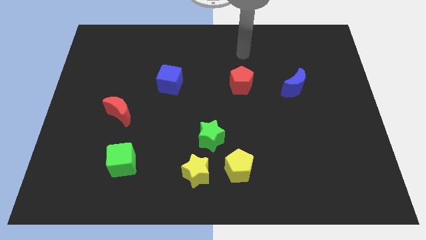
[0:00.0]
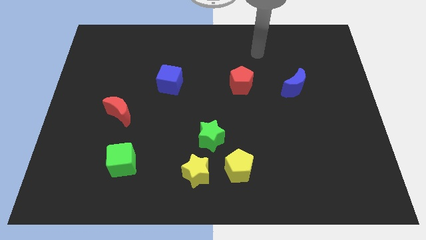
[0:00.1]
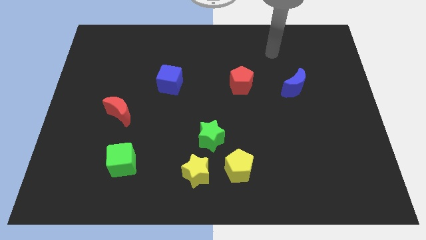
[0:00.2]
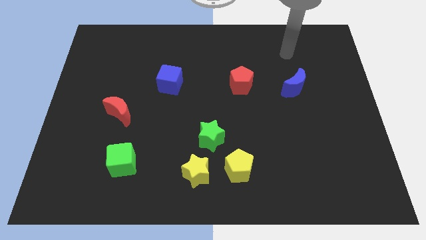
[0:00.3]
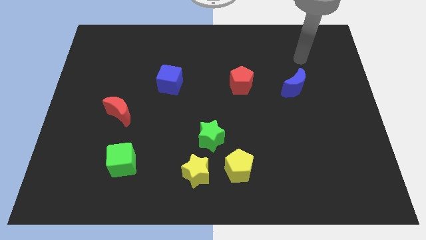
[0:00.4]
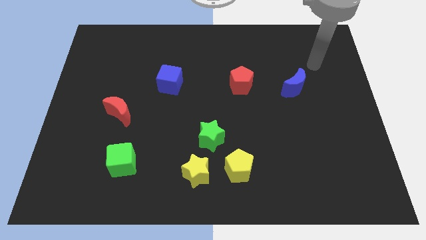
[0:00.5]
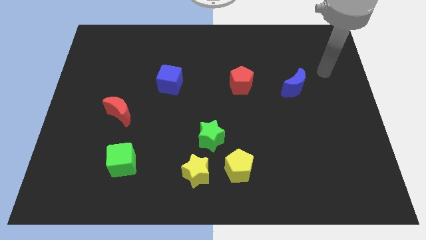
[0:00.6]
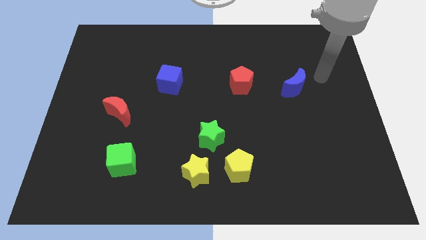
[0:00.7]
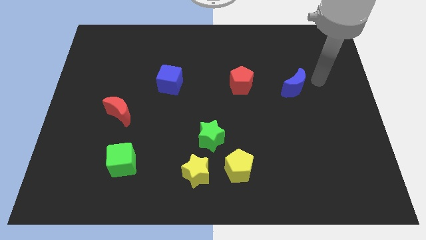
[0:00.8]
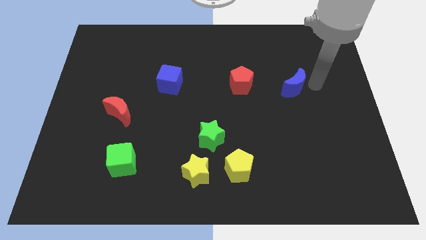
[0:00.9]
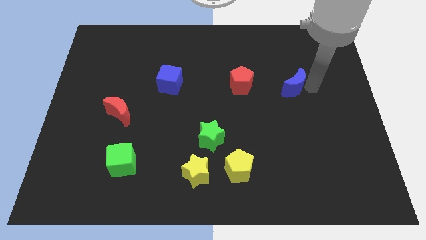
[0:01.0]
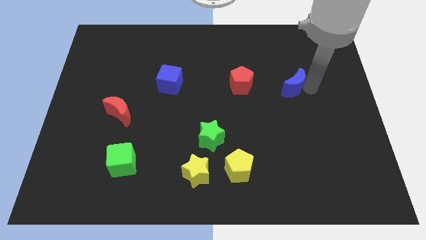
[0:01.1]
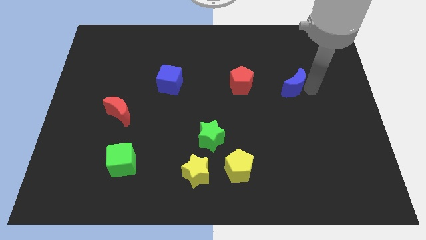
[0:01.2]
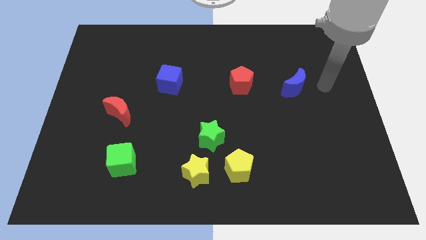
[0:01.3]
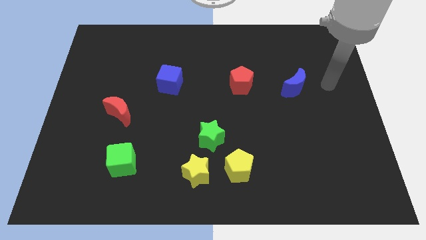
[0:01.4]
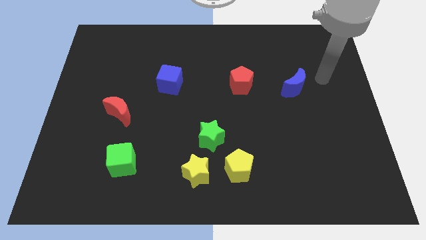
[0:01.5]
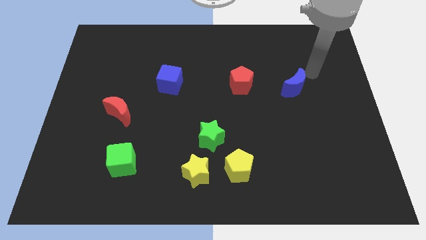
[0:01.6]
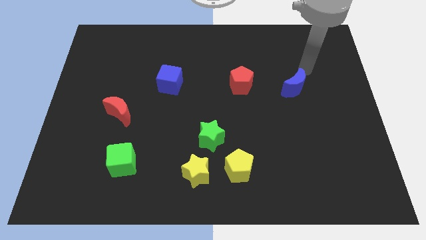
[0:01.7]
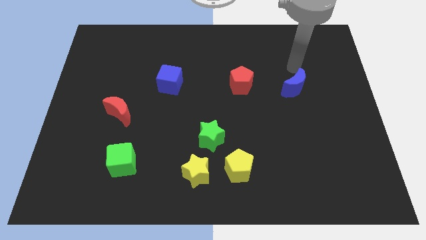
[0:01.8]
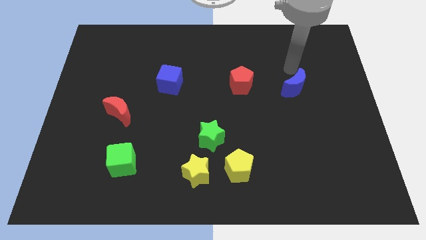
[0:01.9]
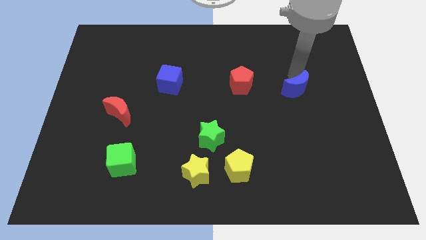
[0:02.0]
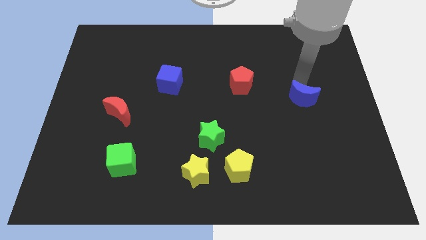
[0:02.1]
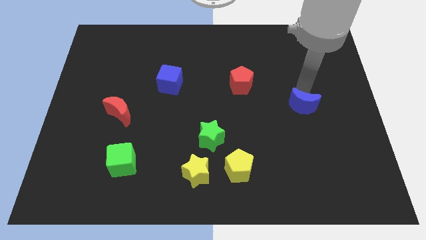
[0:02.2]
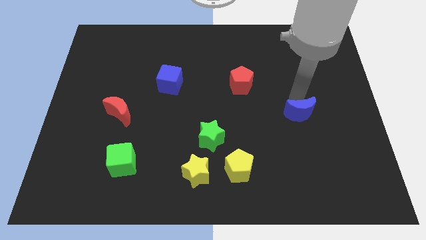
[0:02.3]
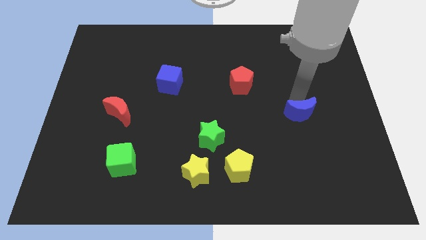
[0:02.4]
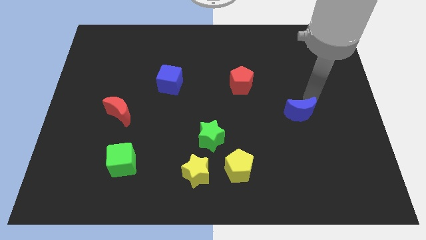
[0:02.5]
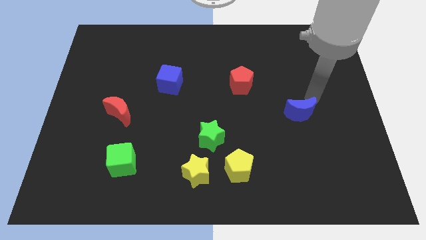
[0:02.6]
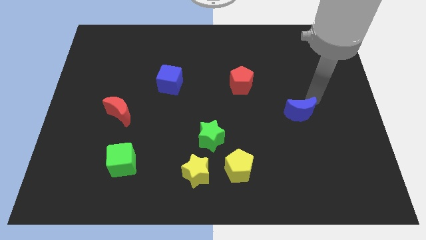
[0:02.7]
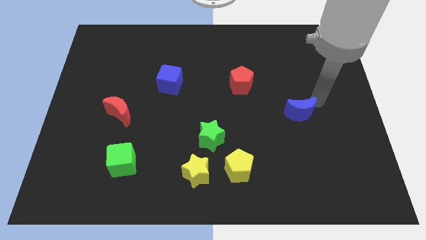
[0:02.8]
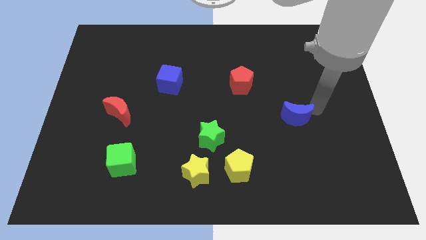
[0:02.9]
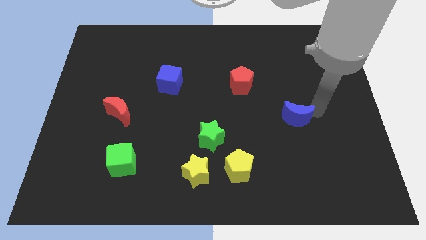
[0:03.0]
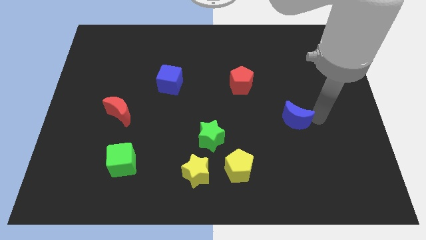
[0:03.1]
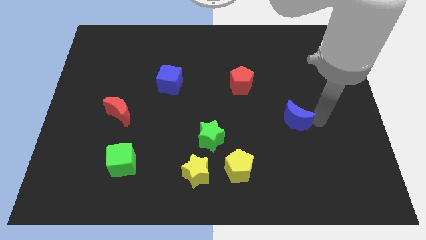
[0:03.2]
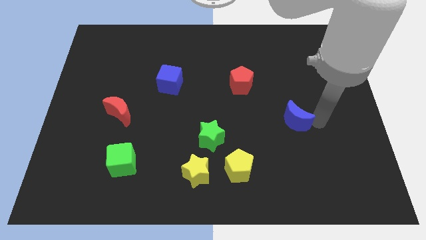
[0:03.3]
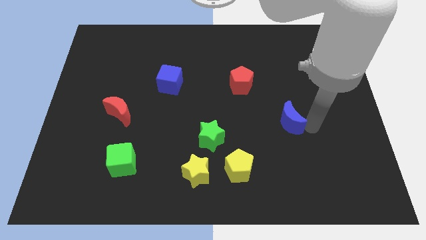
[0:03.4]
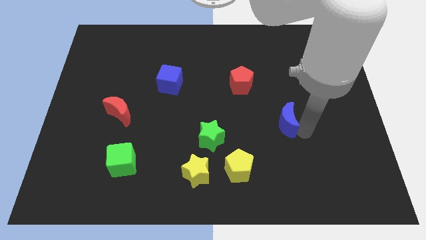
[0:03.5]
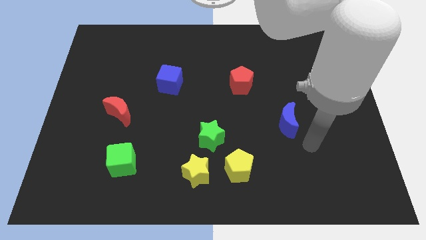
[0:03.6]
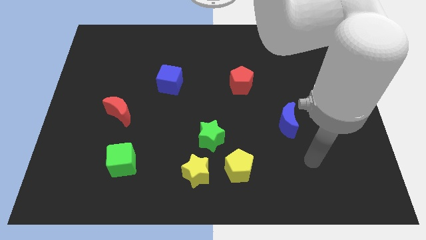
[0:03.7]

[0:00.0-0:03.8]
move the blue crescent downward

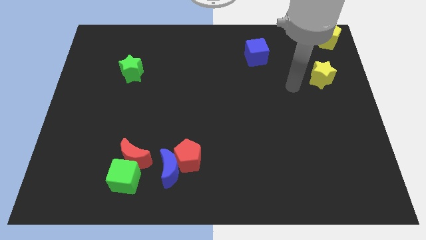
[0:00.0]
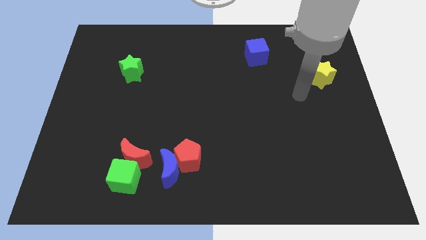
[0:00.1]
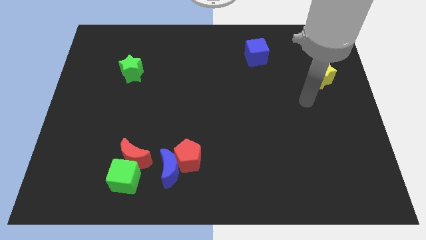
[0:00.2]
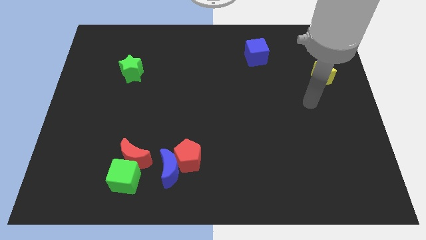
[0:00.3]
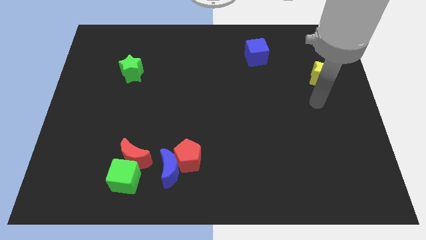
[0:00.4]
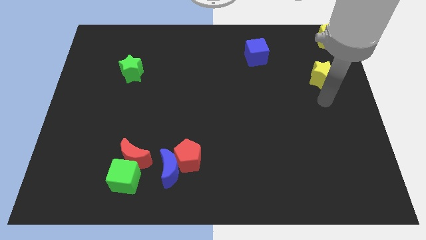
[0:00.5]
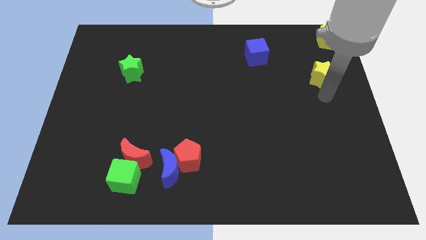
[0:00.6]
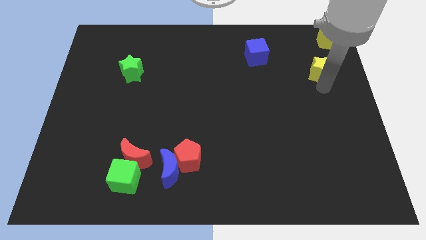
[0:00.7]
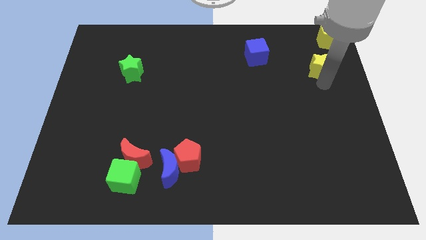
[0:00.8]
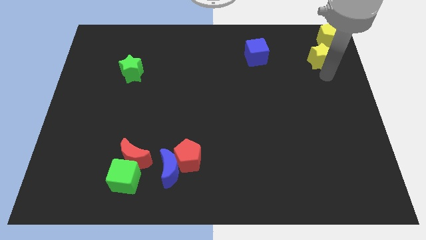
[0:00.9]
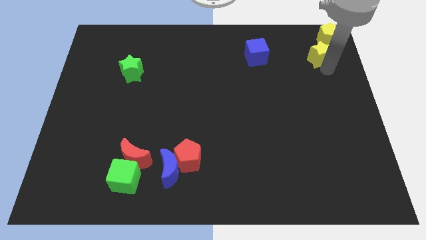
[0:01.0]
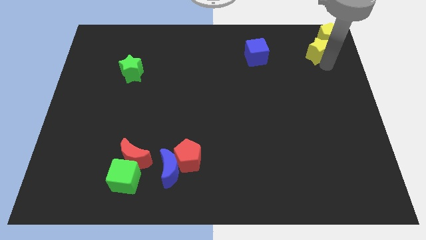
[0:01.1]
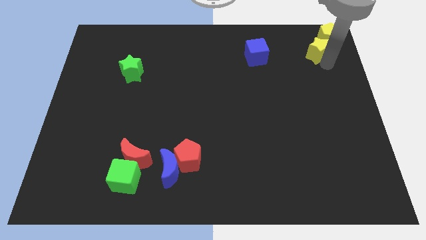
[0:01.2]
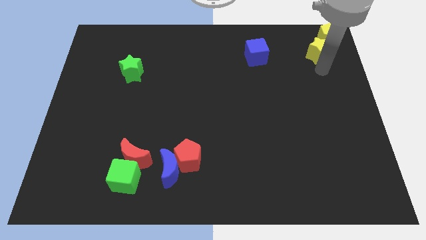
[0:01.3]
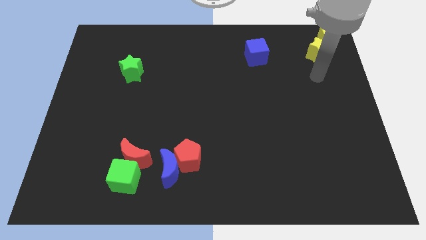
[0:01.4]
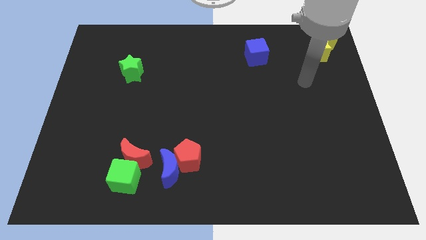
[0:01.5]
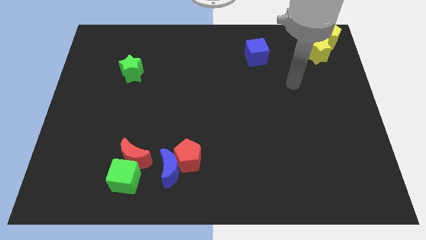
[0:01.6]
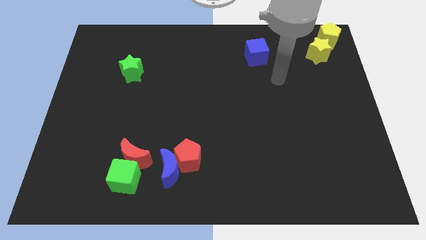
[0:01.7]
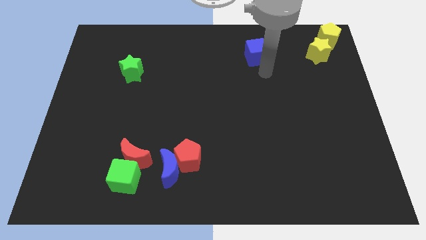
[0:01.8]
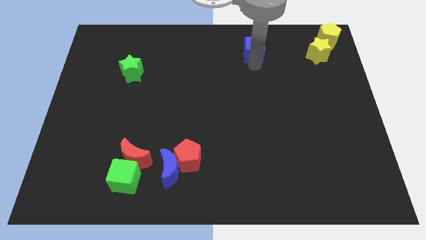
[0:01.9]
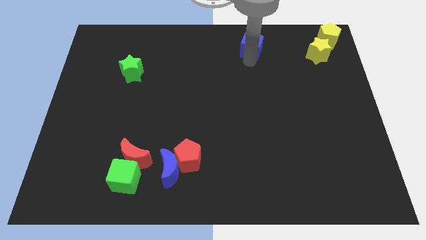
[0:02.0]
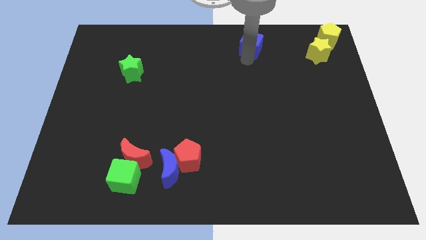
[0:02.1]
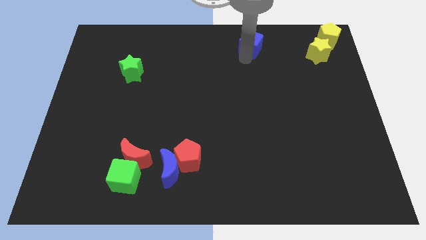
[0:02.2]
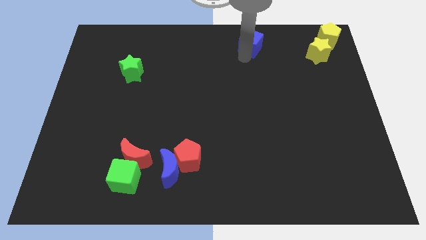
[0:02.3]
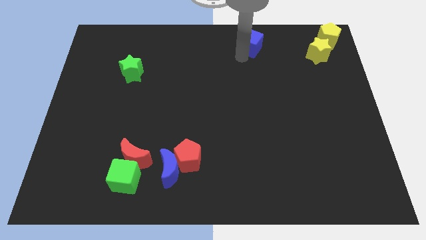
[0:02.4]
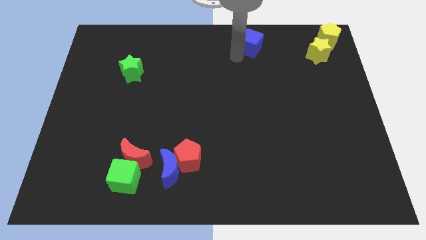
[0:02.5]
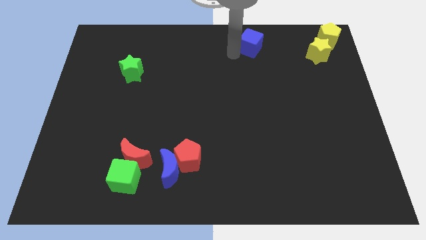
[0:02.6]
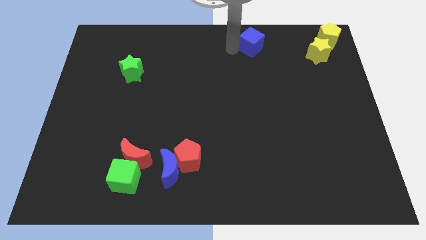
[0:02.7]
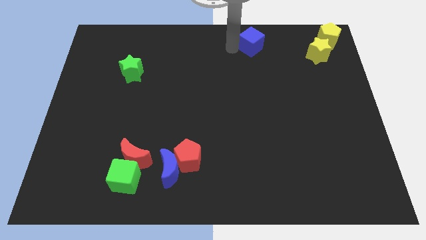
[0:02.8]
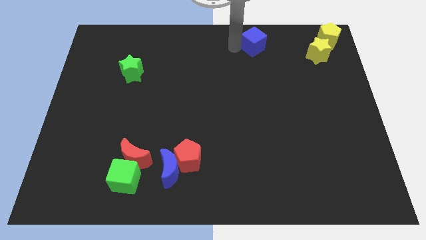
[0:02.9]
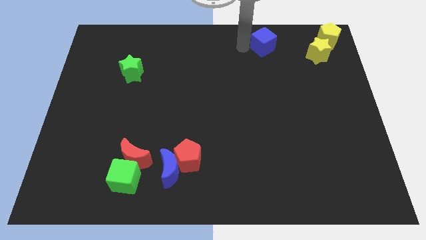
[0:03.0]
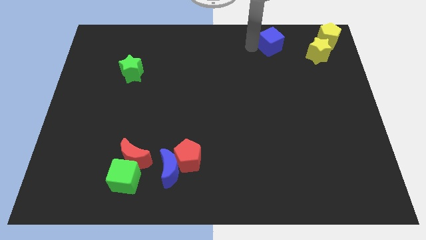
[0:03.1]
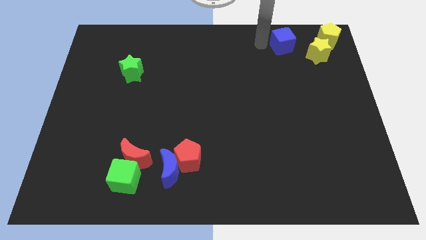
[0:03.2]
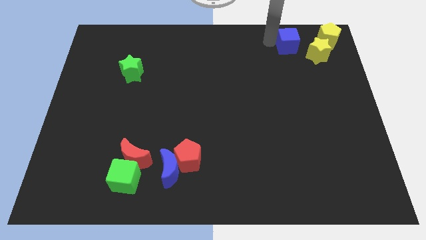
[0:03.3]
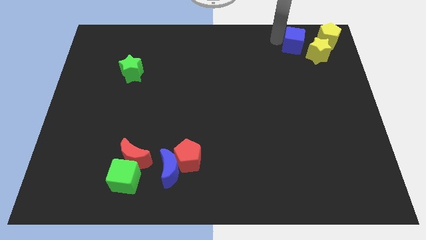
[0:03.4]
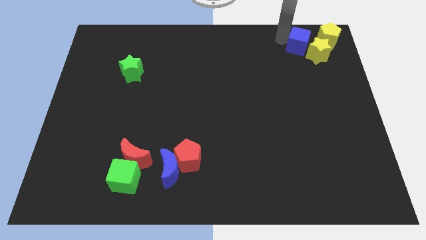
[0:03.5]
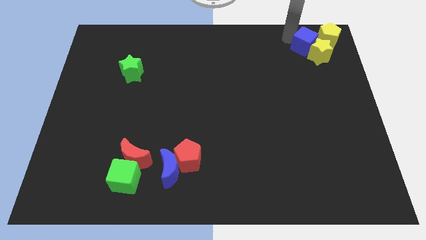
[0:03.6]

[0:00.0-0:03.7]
move blue cube into the yellow star

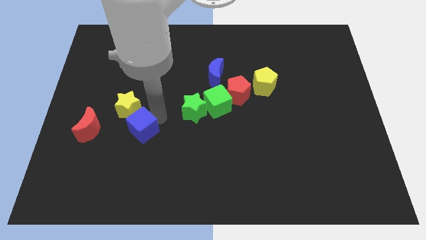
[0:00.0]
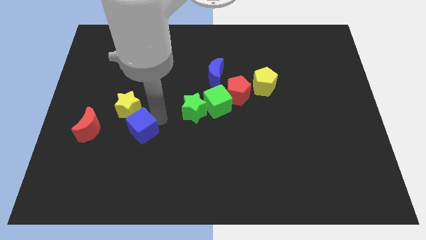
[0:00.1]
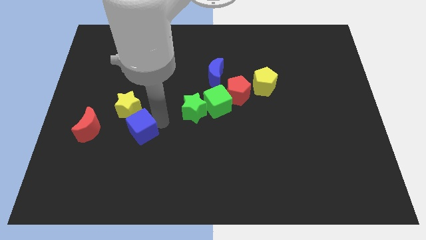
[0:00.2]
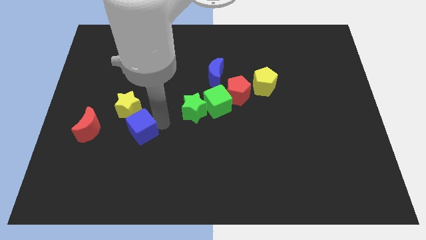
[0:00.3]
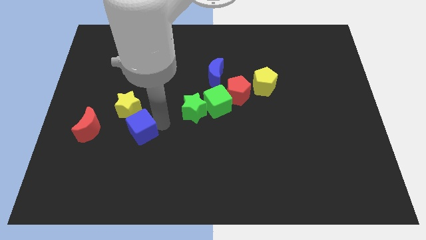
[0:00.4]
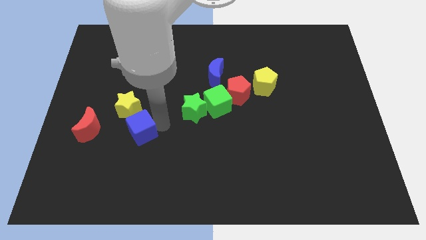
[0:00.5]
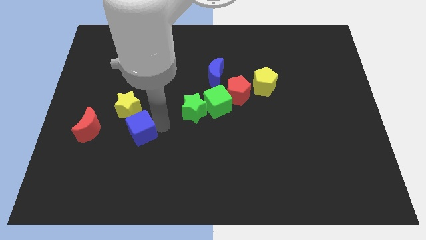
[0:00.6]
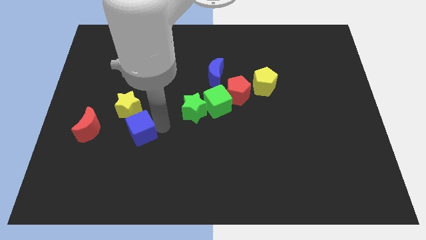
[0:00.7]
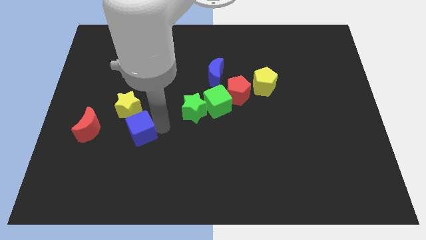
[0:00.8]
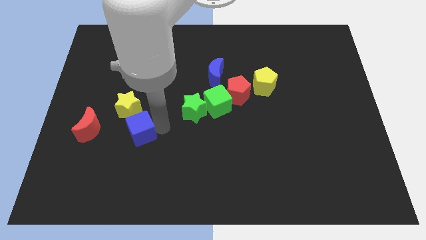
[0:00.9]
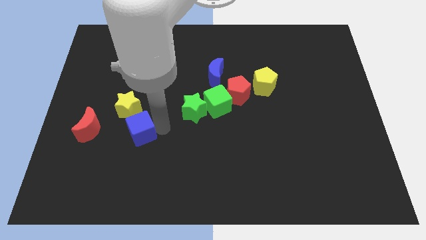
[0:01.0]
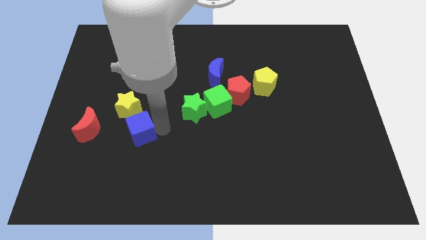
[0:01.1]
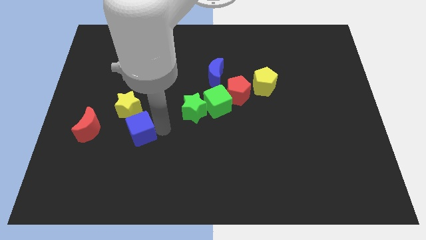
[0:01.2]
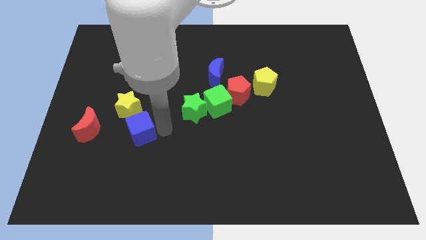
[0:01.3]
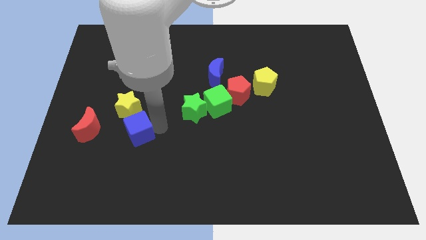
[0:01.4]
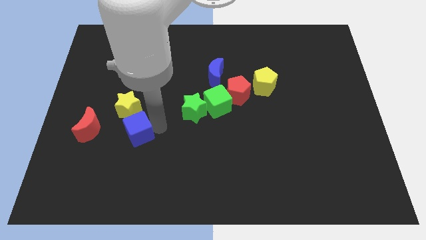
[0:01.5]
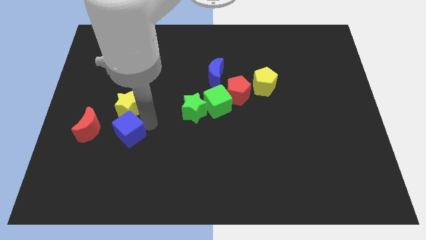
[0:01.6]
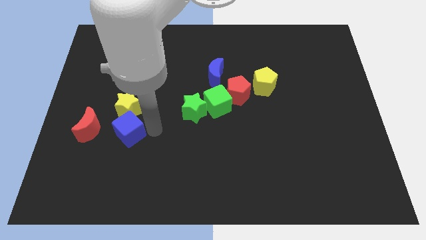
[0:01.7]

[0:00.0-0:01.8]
slightly move the blue cube to the bottom of the yellow star
